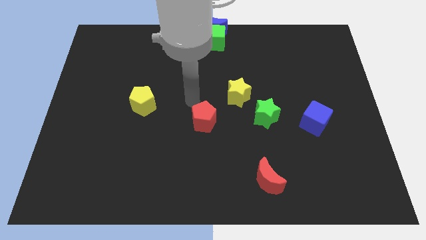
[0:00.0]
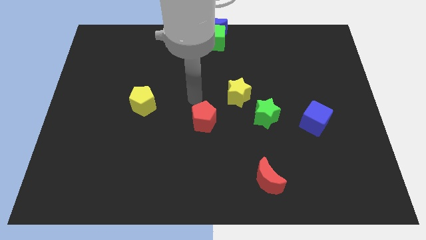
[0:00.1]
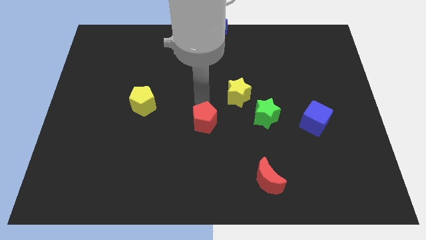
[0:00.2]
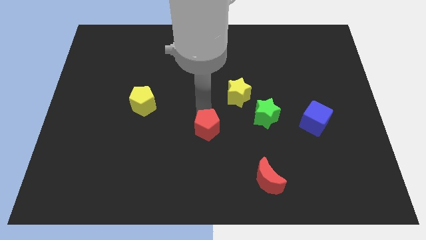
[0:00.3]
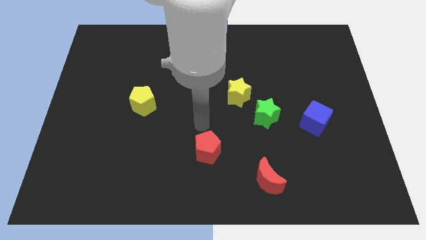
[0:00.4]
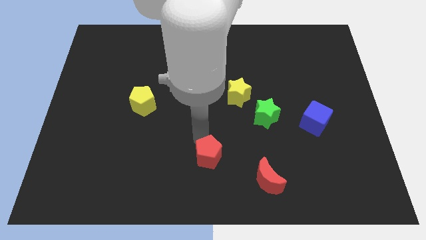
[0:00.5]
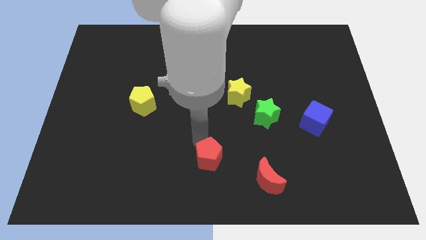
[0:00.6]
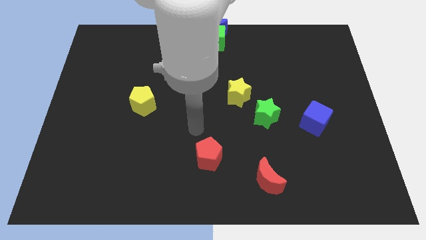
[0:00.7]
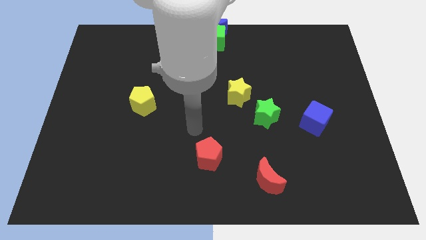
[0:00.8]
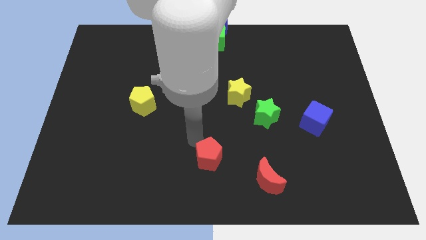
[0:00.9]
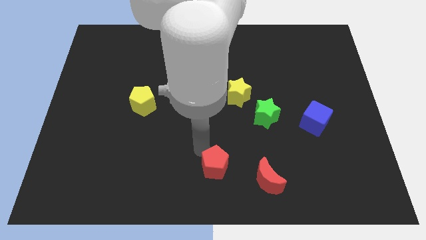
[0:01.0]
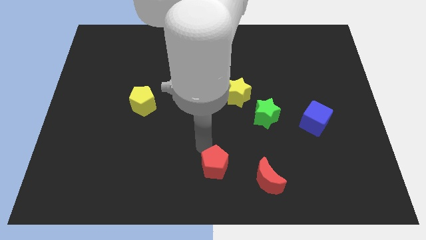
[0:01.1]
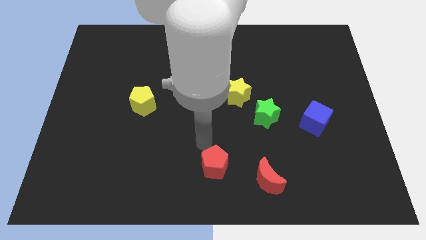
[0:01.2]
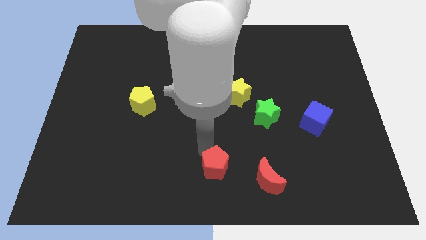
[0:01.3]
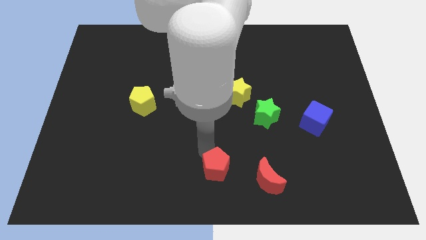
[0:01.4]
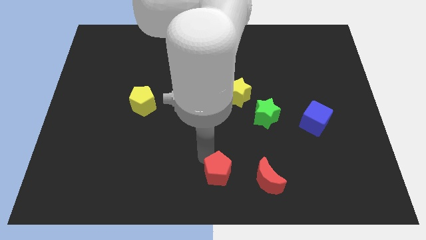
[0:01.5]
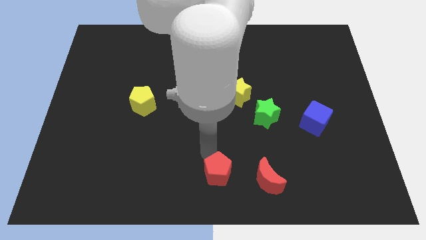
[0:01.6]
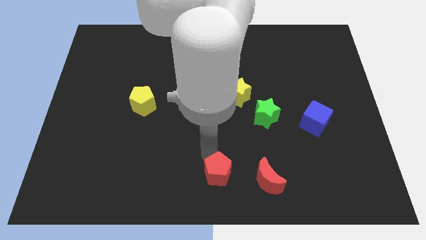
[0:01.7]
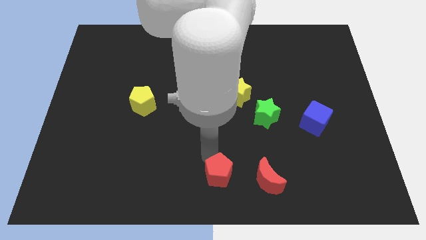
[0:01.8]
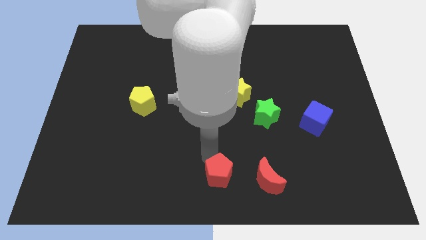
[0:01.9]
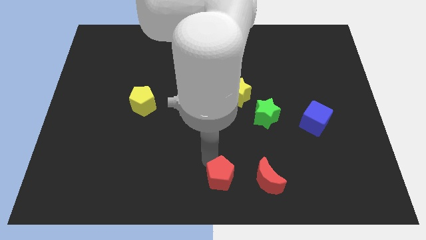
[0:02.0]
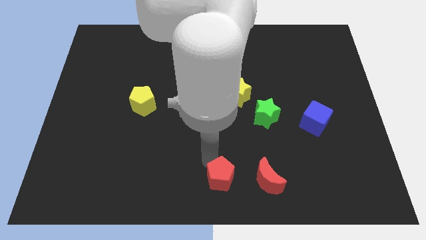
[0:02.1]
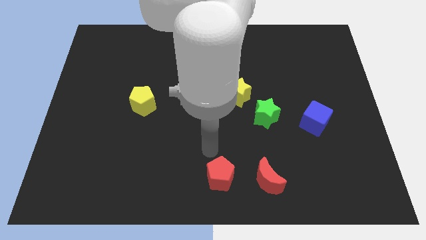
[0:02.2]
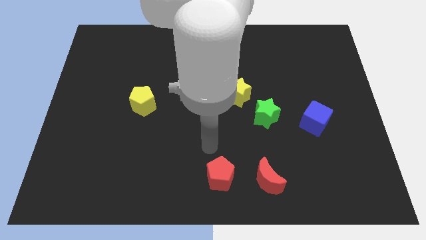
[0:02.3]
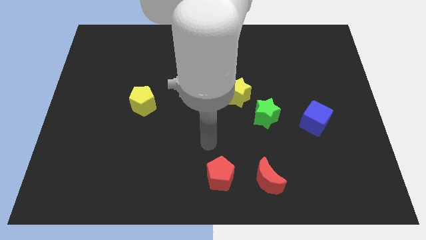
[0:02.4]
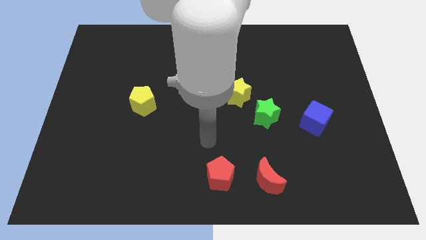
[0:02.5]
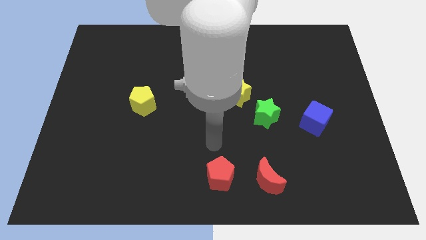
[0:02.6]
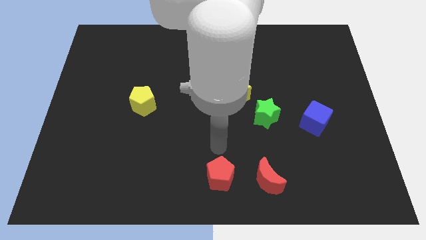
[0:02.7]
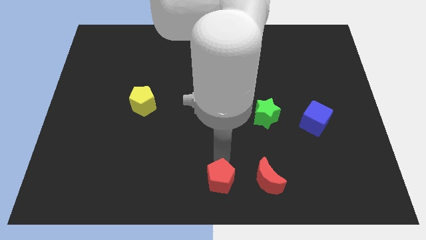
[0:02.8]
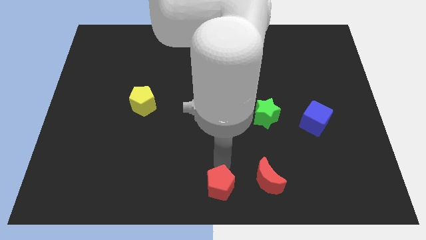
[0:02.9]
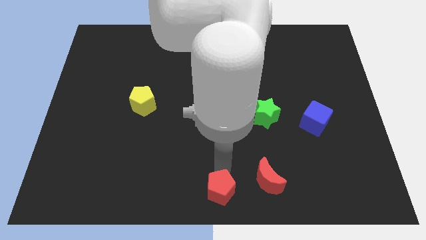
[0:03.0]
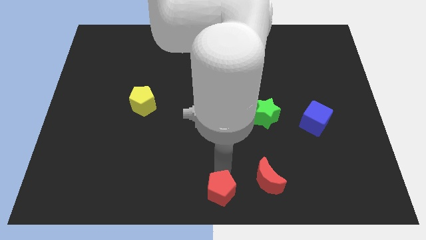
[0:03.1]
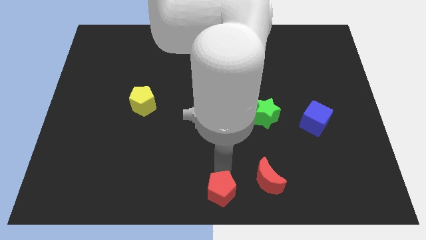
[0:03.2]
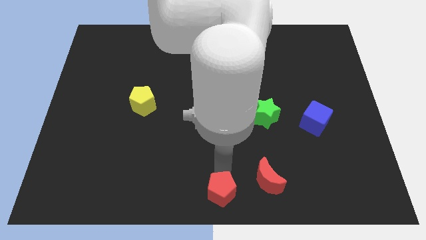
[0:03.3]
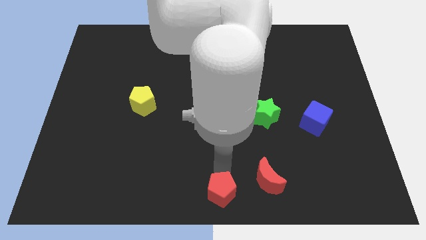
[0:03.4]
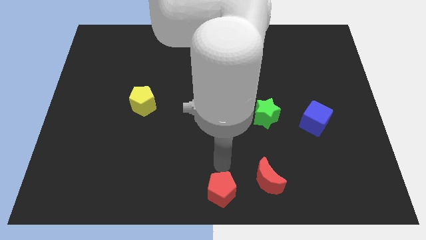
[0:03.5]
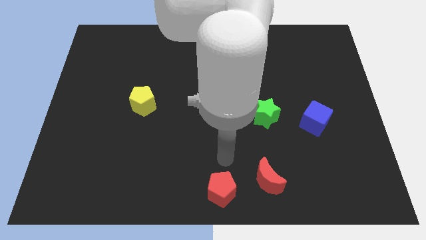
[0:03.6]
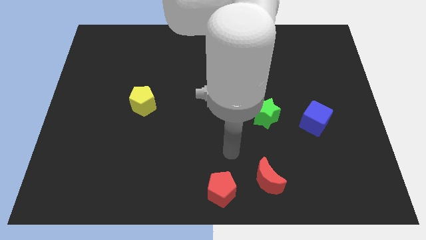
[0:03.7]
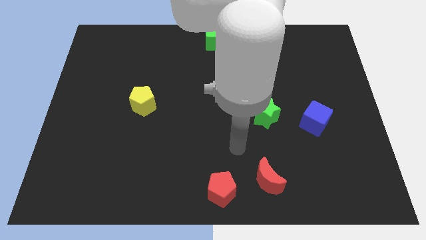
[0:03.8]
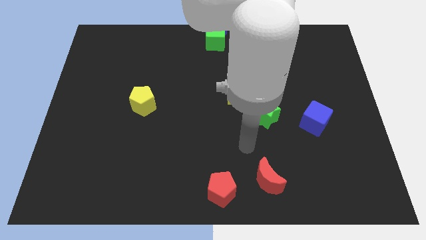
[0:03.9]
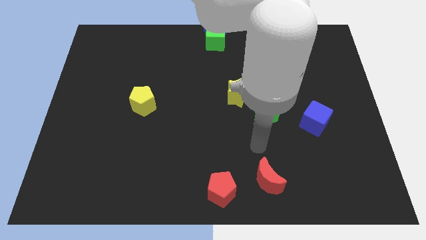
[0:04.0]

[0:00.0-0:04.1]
slide red pentagon to the bottom center

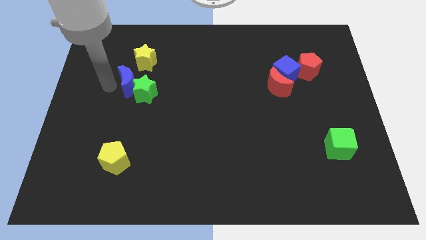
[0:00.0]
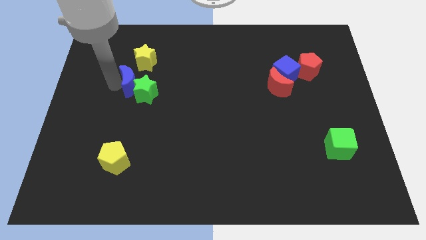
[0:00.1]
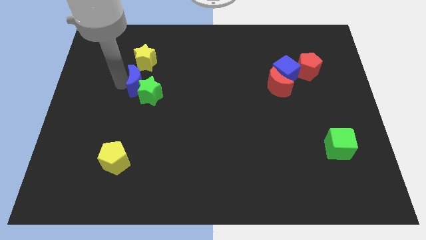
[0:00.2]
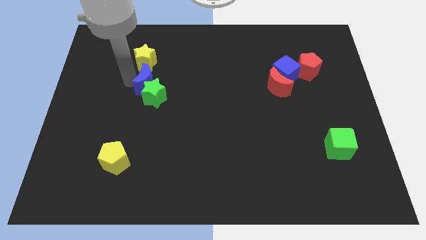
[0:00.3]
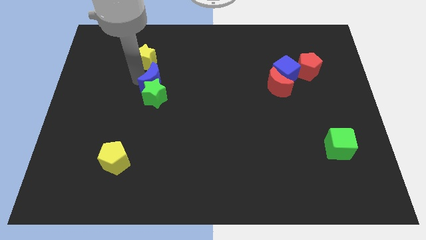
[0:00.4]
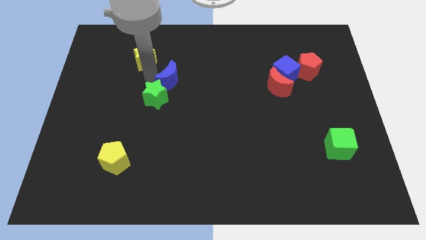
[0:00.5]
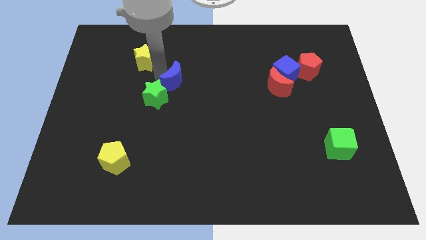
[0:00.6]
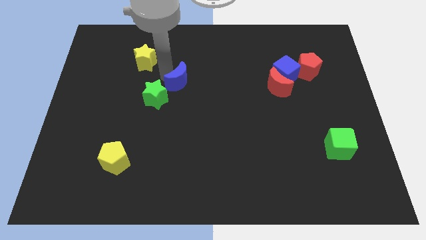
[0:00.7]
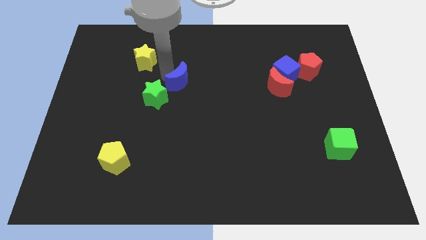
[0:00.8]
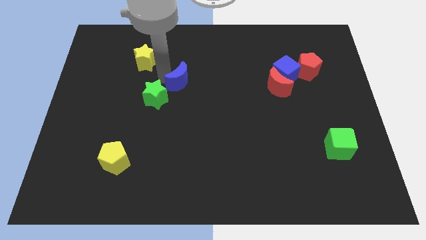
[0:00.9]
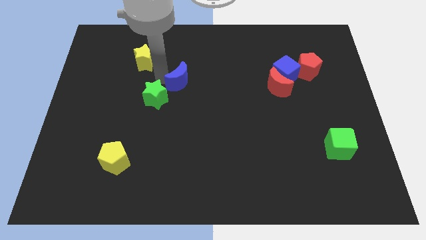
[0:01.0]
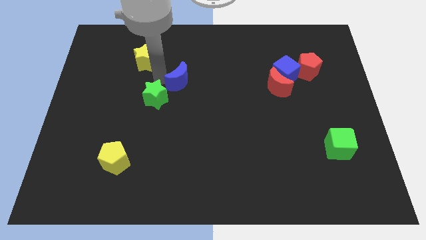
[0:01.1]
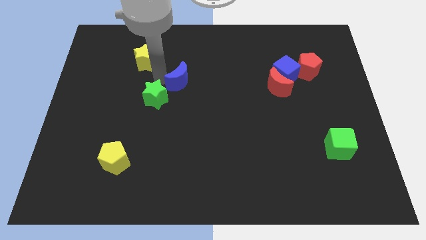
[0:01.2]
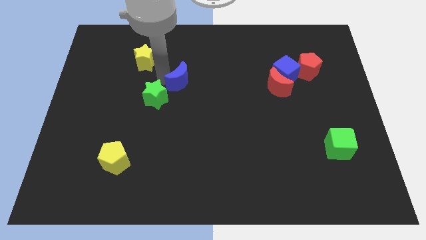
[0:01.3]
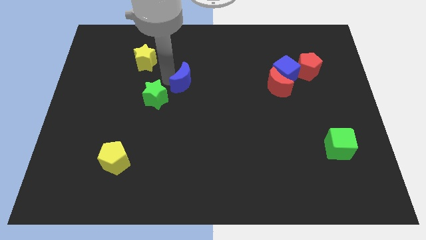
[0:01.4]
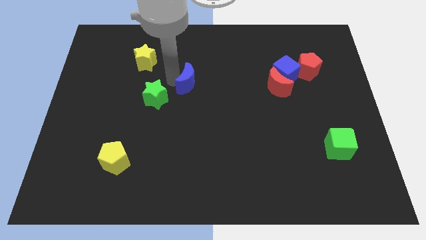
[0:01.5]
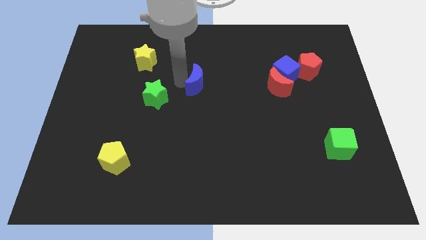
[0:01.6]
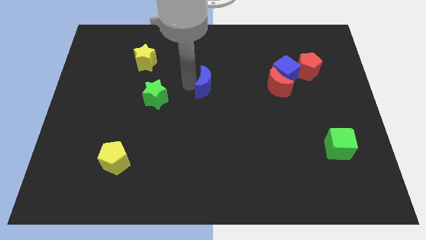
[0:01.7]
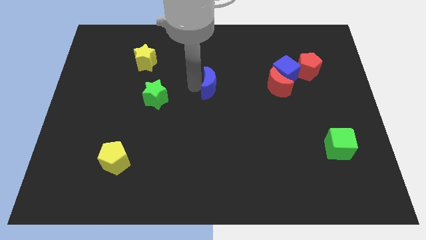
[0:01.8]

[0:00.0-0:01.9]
place the blue crescent towards the center of the board

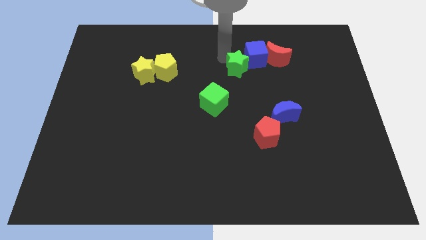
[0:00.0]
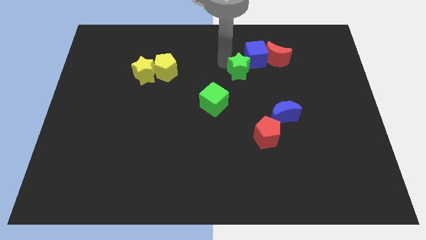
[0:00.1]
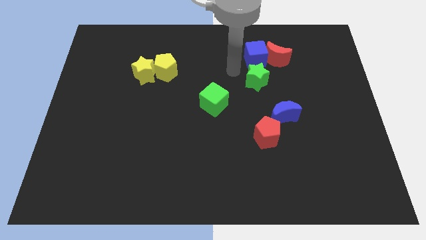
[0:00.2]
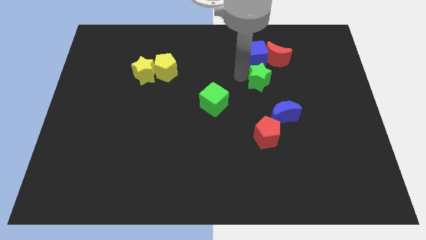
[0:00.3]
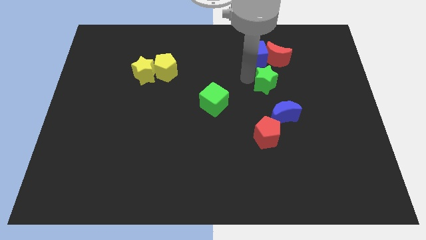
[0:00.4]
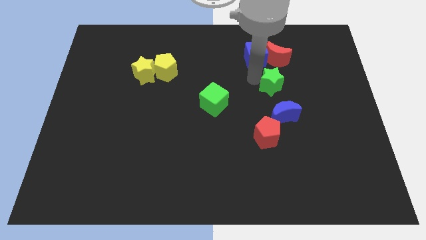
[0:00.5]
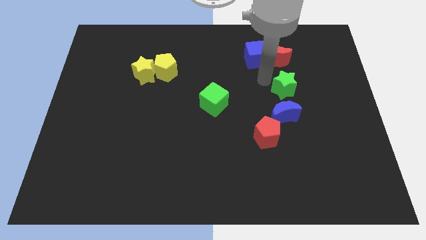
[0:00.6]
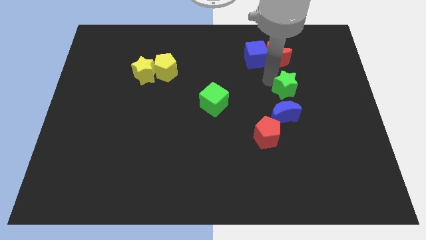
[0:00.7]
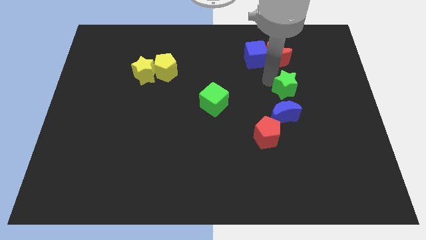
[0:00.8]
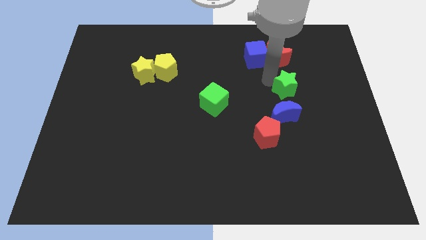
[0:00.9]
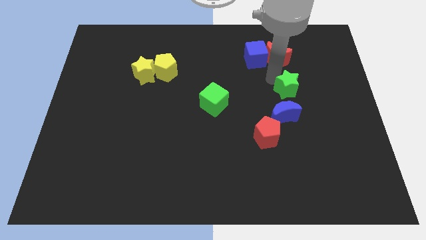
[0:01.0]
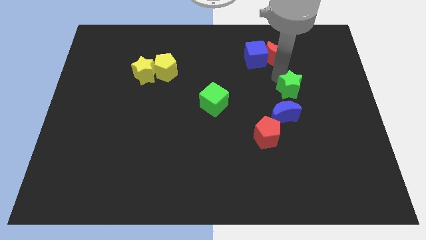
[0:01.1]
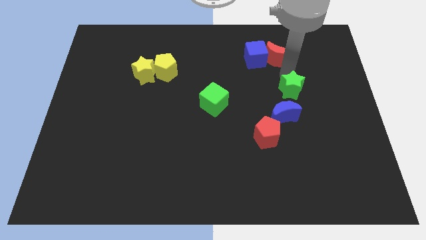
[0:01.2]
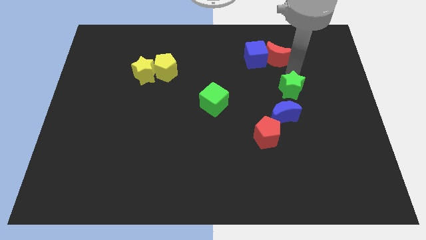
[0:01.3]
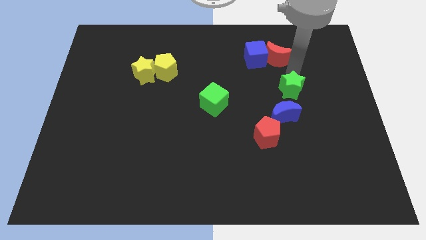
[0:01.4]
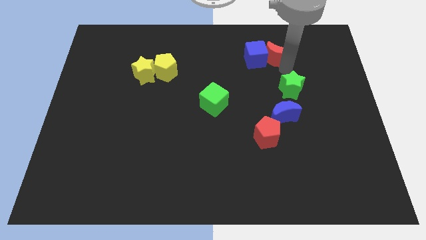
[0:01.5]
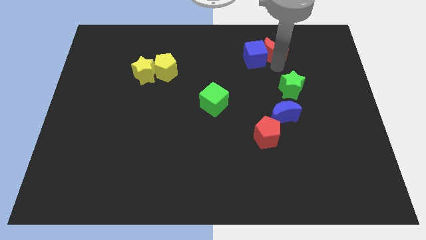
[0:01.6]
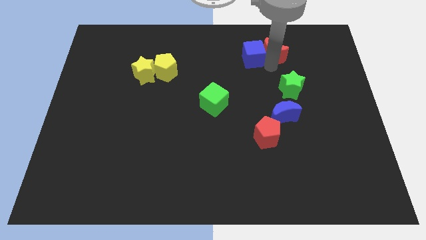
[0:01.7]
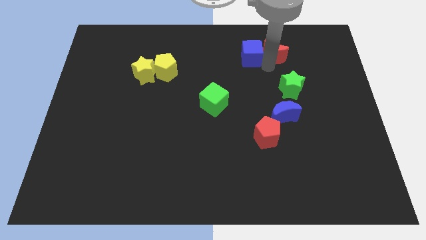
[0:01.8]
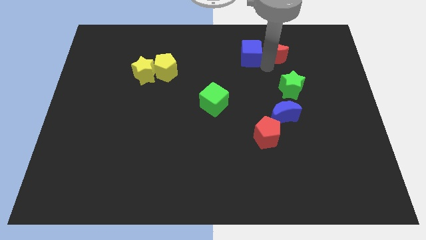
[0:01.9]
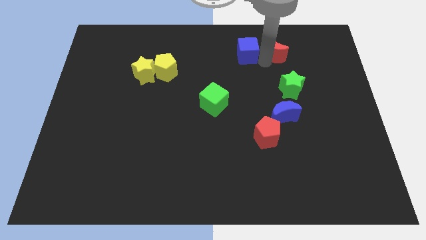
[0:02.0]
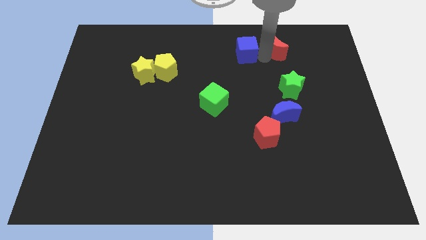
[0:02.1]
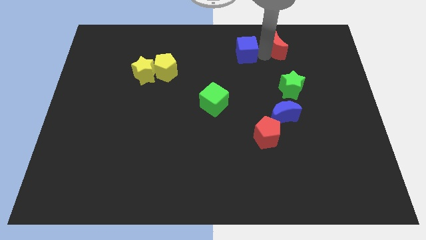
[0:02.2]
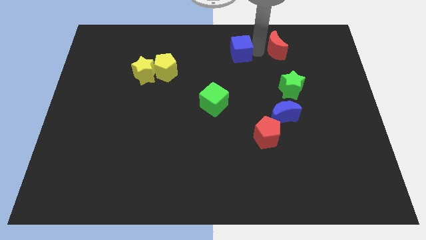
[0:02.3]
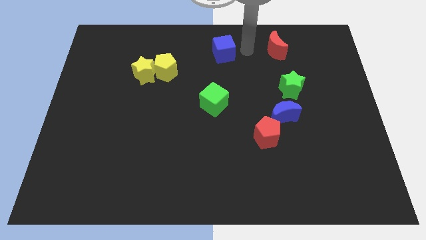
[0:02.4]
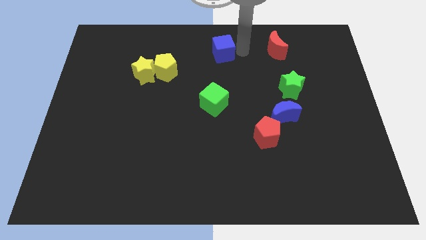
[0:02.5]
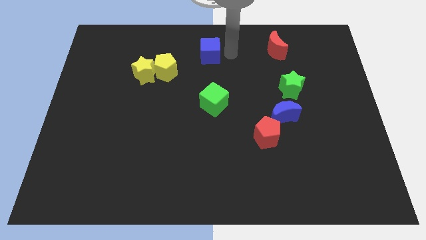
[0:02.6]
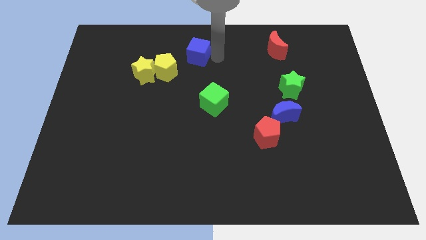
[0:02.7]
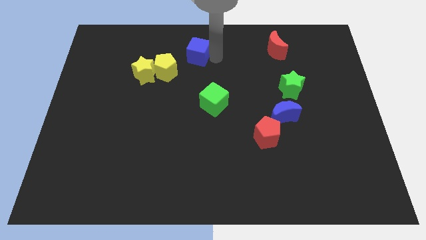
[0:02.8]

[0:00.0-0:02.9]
move the blue cube to the horizontal line near to the yellow pentagon and yellow star

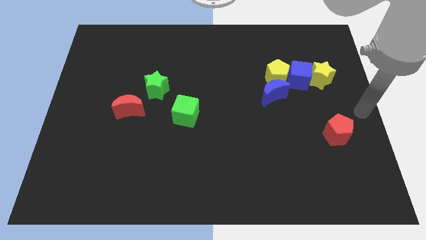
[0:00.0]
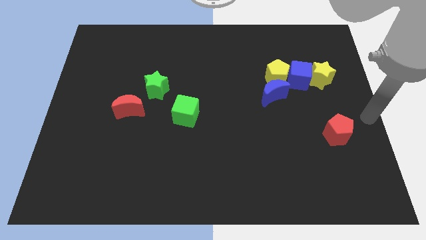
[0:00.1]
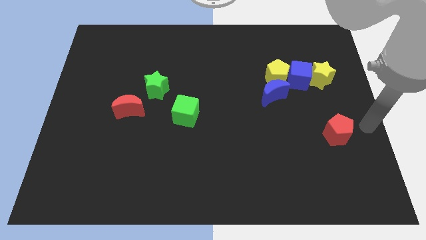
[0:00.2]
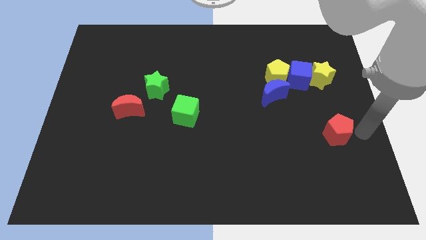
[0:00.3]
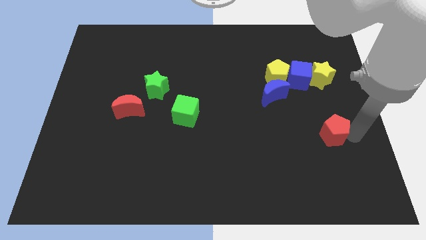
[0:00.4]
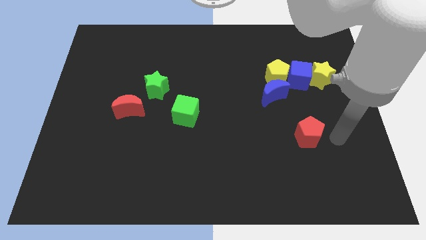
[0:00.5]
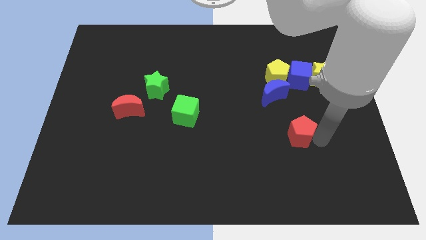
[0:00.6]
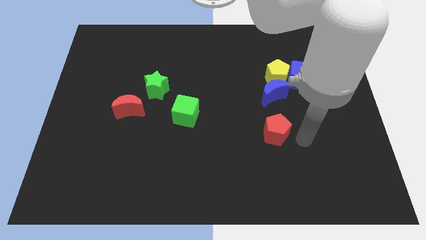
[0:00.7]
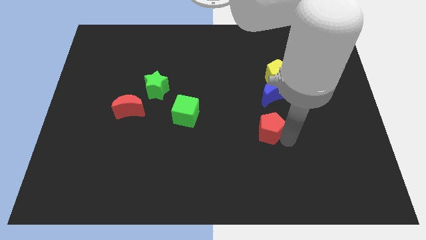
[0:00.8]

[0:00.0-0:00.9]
put the red pentagon below the blue crescent
